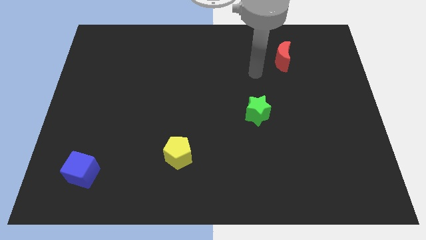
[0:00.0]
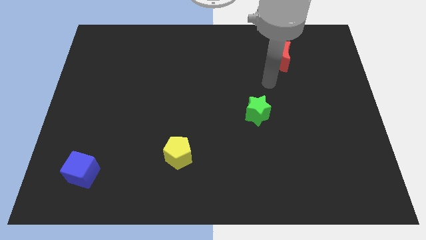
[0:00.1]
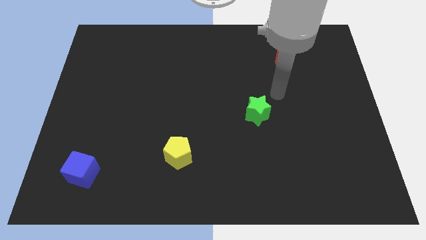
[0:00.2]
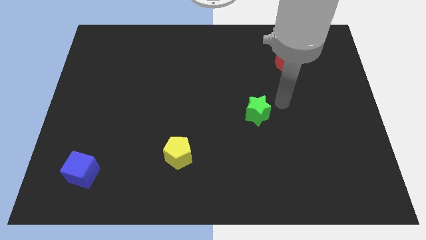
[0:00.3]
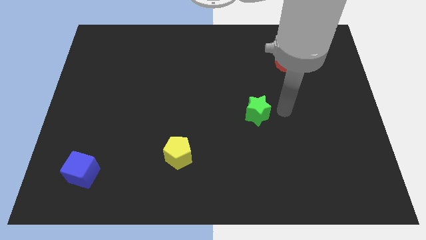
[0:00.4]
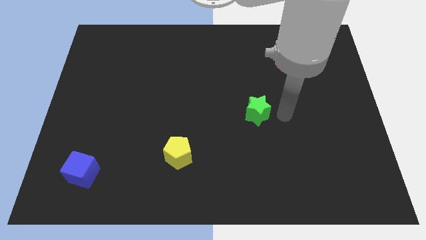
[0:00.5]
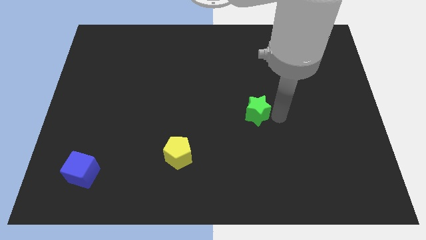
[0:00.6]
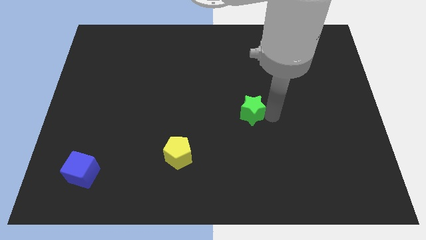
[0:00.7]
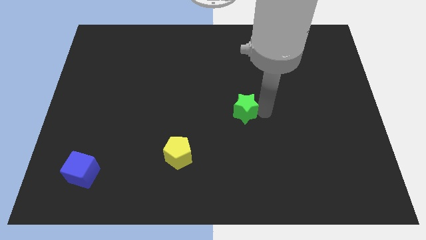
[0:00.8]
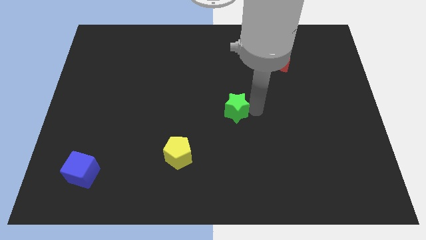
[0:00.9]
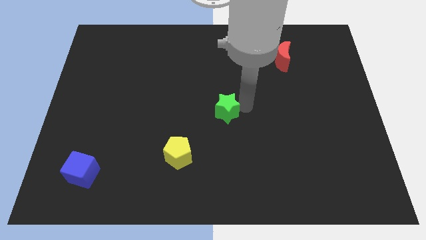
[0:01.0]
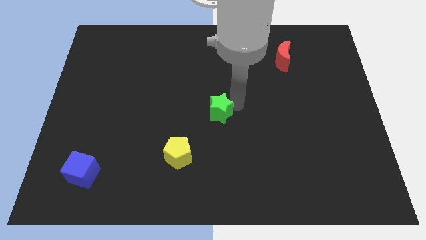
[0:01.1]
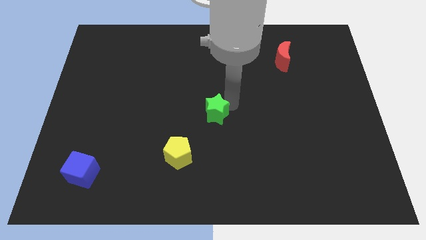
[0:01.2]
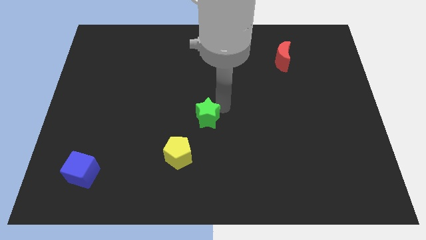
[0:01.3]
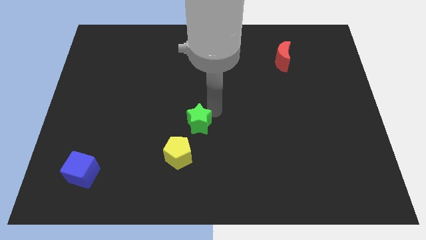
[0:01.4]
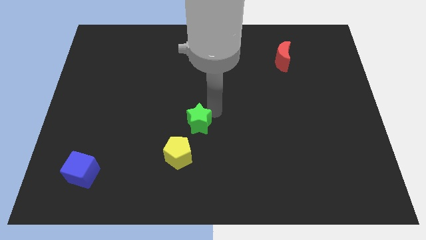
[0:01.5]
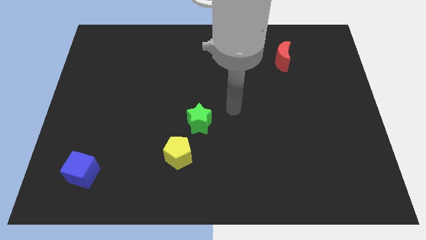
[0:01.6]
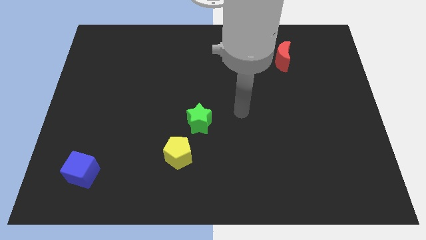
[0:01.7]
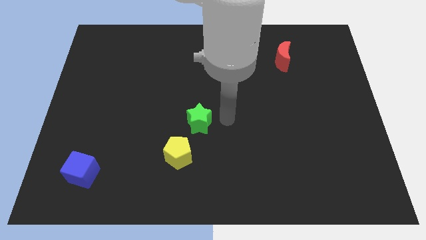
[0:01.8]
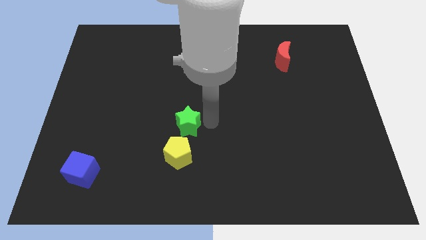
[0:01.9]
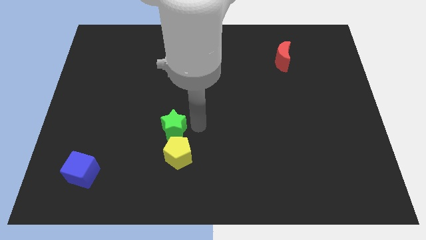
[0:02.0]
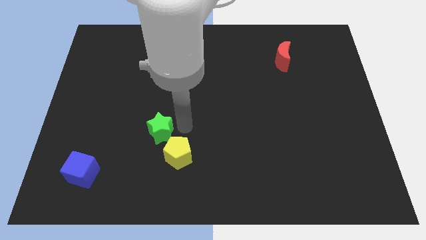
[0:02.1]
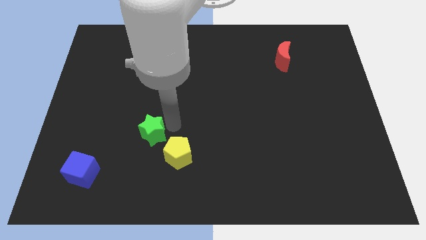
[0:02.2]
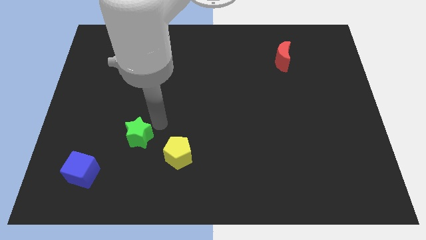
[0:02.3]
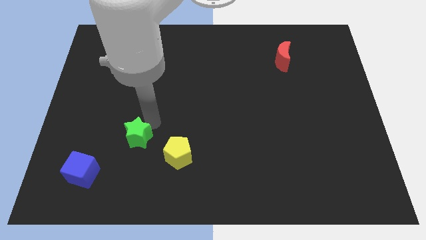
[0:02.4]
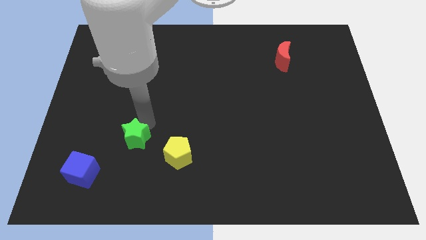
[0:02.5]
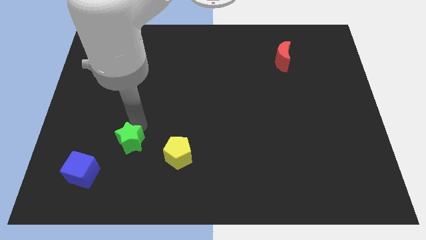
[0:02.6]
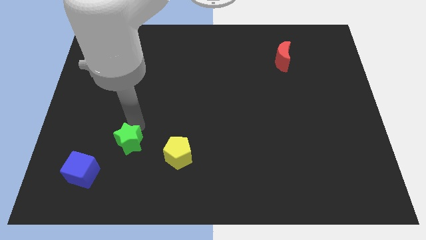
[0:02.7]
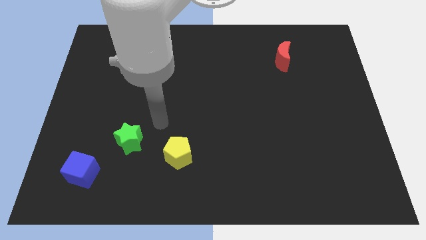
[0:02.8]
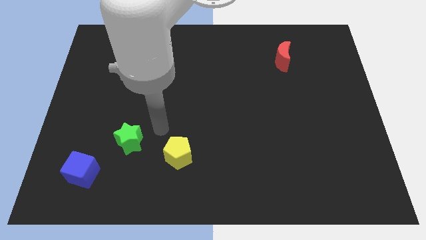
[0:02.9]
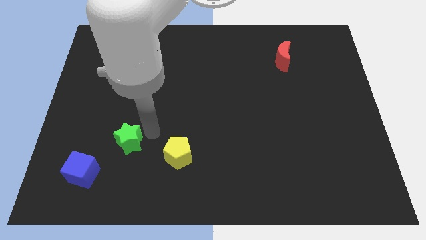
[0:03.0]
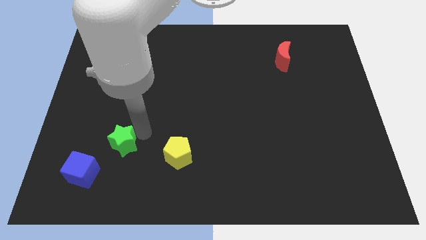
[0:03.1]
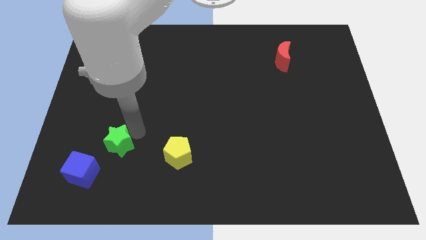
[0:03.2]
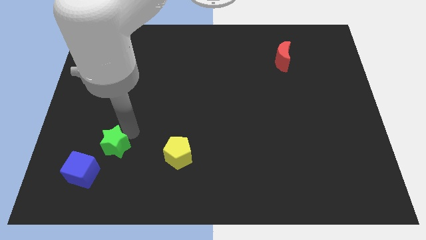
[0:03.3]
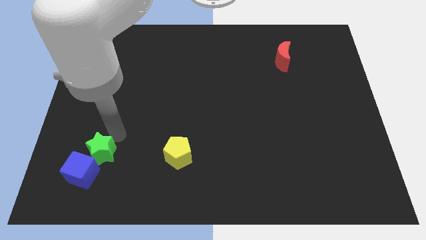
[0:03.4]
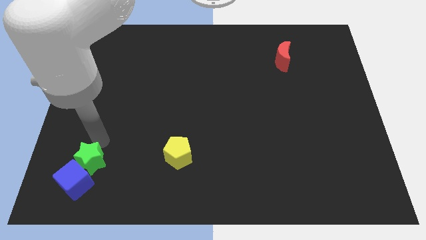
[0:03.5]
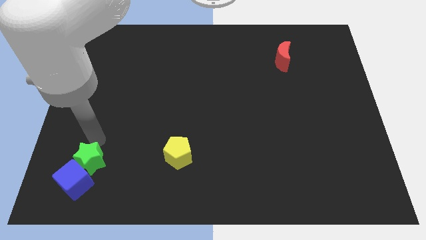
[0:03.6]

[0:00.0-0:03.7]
push the star close to the blue block

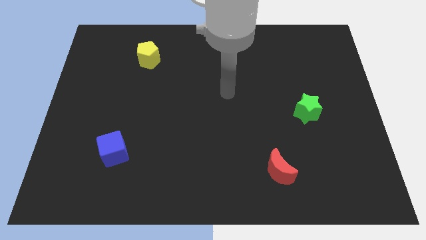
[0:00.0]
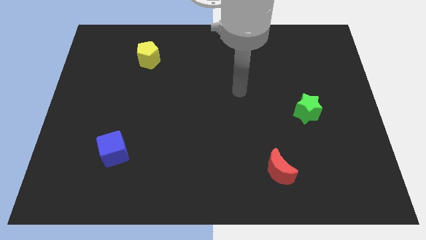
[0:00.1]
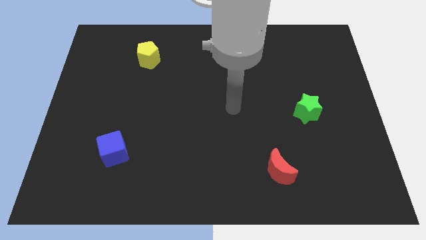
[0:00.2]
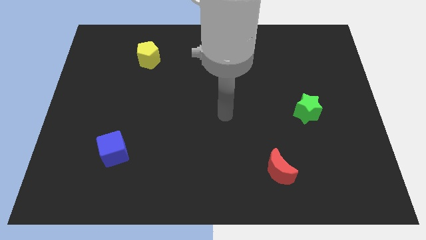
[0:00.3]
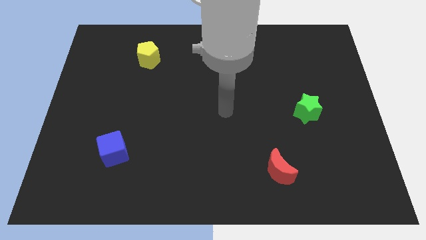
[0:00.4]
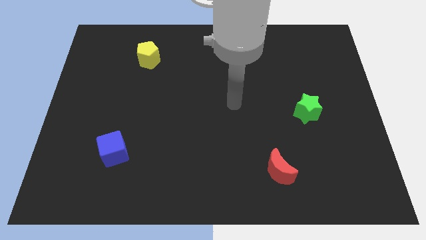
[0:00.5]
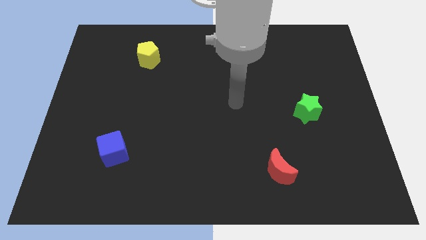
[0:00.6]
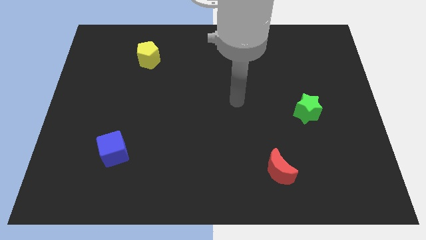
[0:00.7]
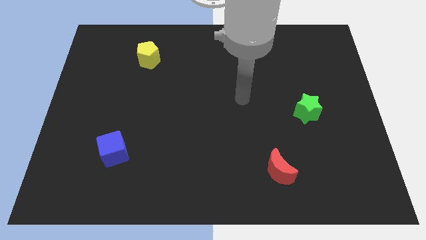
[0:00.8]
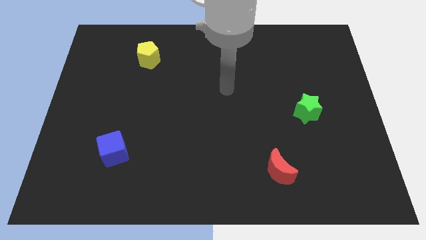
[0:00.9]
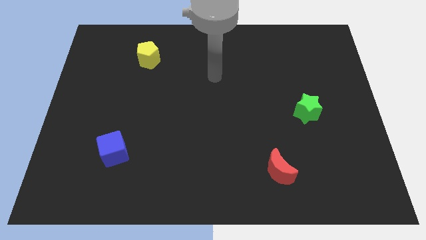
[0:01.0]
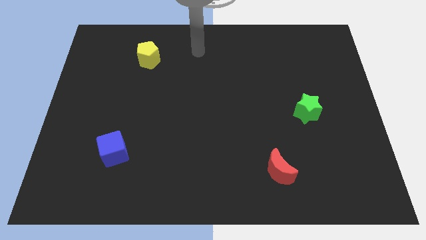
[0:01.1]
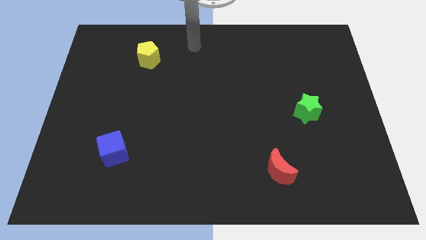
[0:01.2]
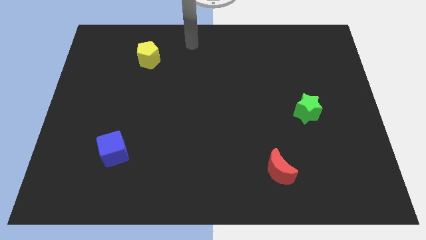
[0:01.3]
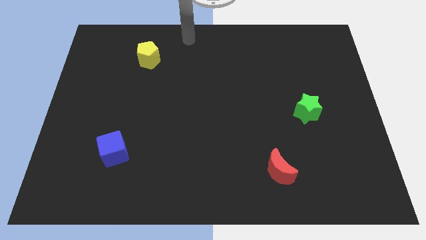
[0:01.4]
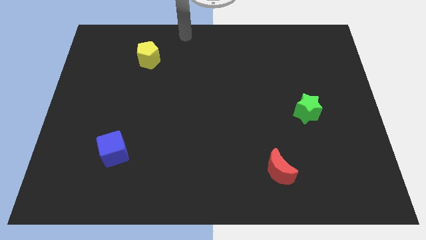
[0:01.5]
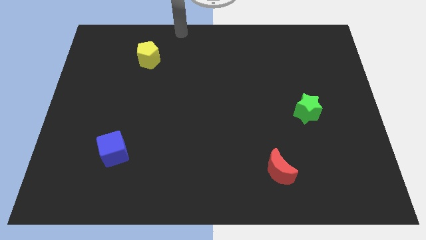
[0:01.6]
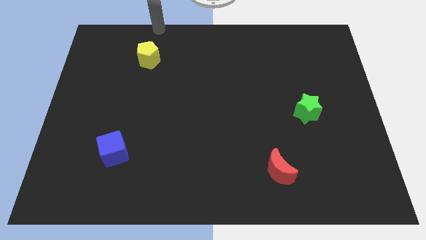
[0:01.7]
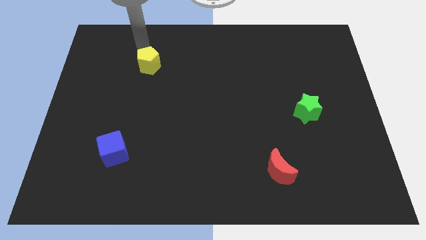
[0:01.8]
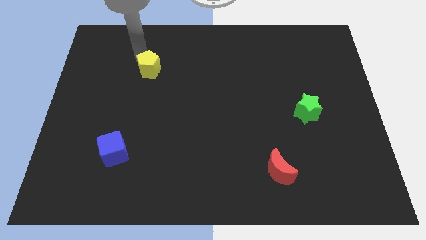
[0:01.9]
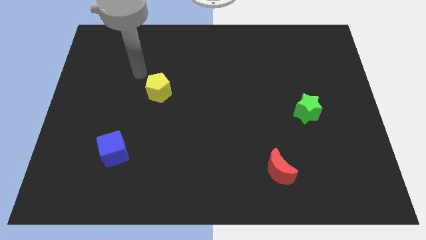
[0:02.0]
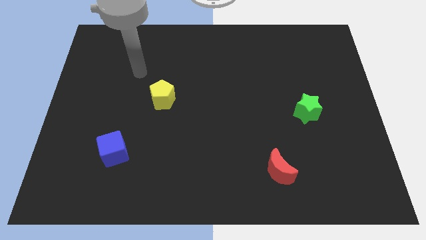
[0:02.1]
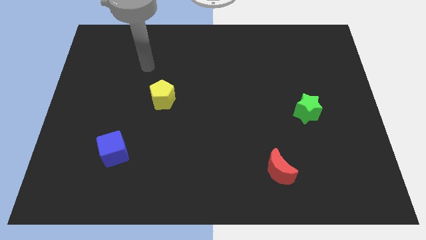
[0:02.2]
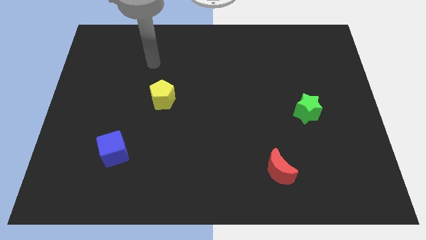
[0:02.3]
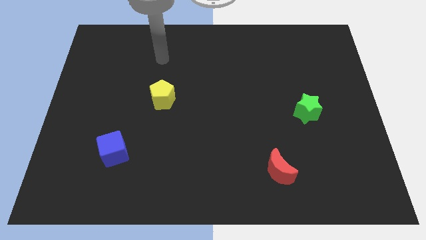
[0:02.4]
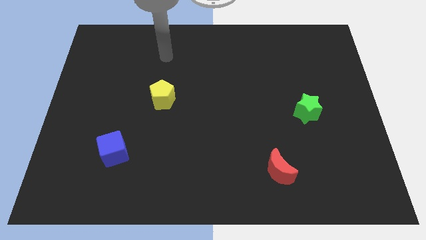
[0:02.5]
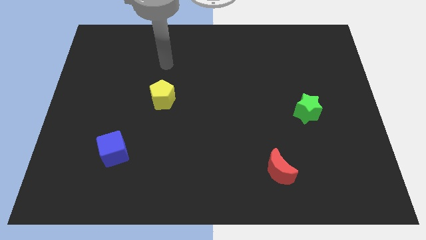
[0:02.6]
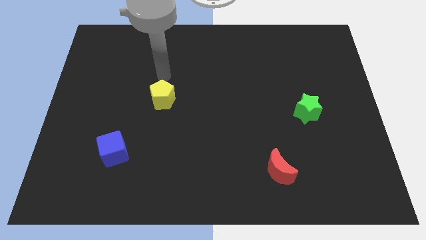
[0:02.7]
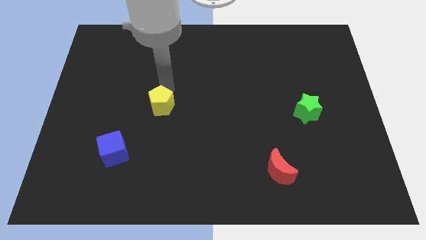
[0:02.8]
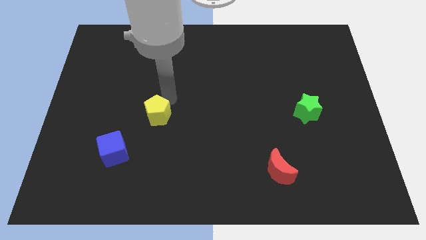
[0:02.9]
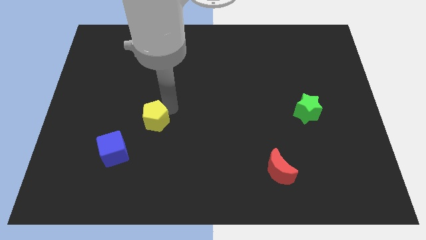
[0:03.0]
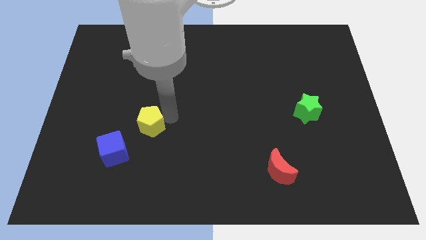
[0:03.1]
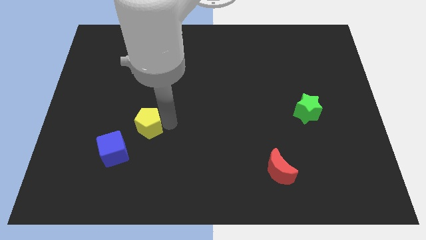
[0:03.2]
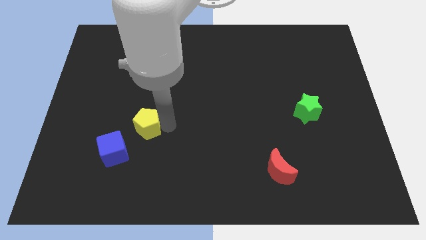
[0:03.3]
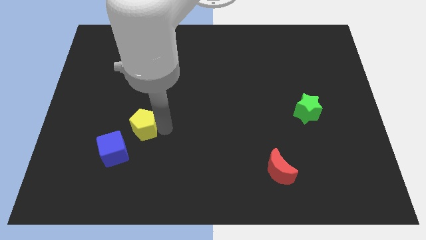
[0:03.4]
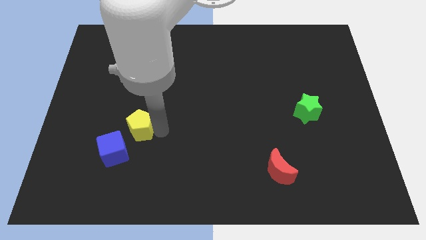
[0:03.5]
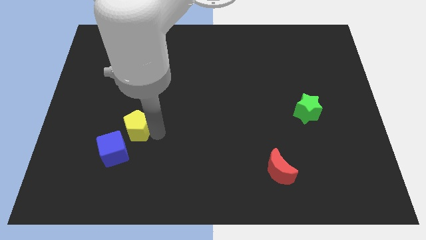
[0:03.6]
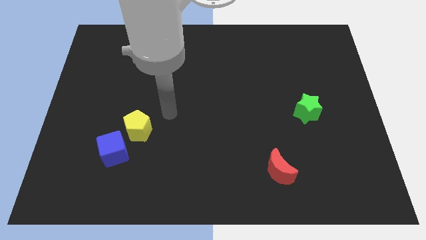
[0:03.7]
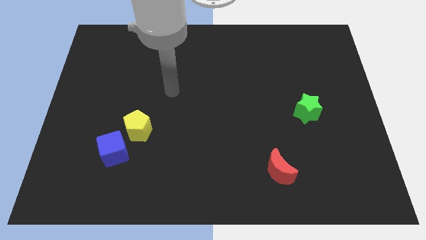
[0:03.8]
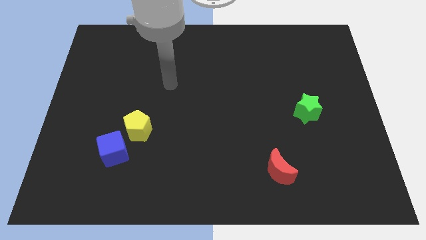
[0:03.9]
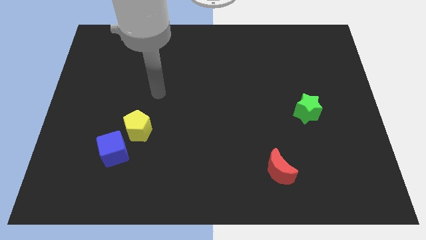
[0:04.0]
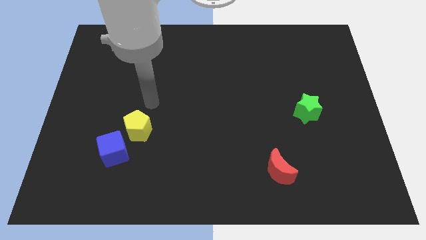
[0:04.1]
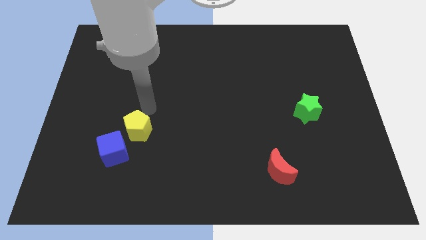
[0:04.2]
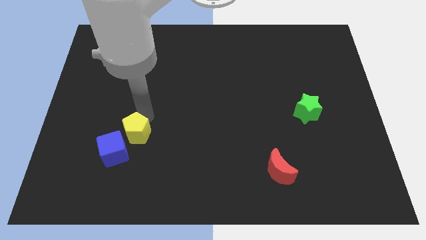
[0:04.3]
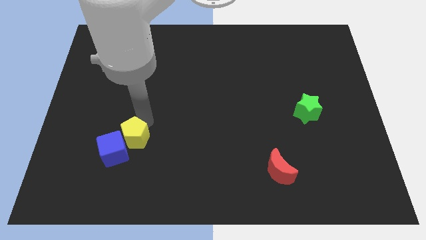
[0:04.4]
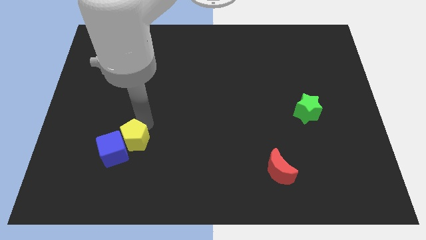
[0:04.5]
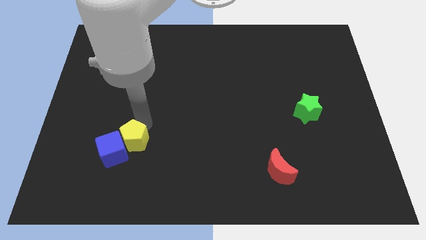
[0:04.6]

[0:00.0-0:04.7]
put the yellow block next to the blue block
